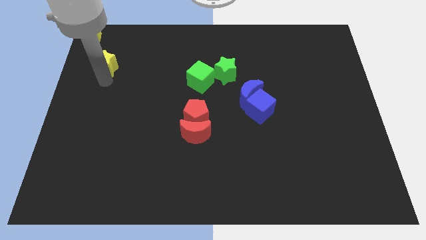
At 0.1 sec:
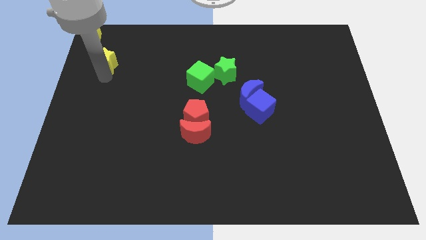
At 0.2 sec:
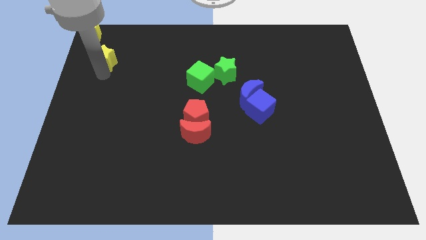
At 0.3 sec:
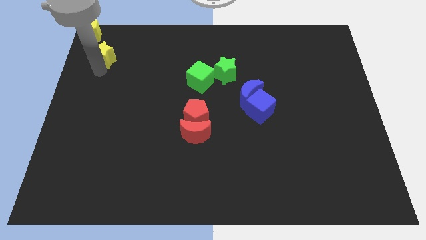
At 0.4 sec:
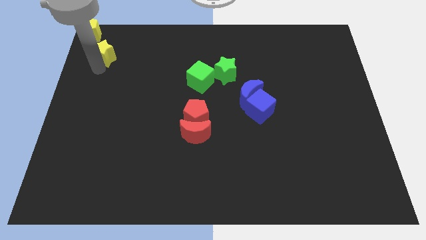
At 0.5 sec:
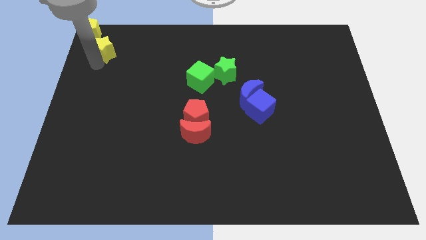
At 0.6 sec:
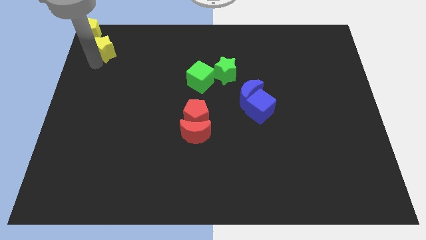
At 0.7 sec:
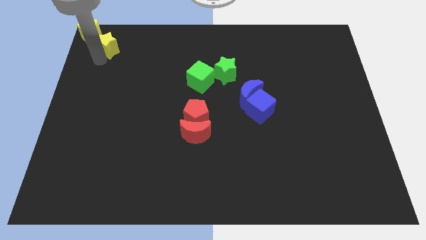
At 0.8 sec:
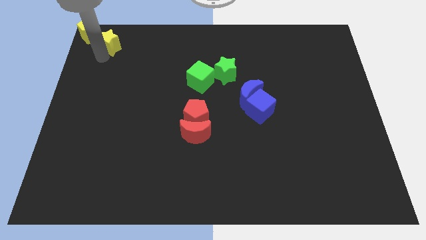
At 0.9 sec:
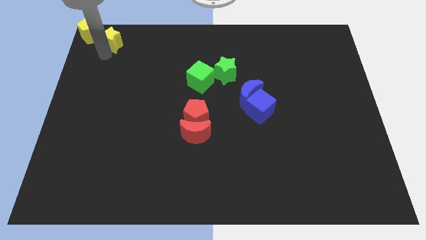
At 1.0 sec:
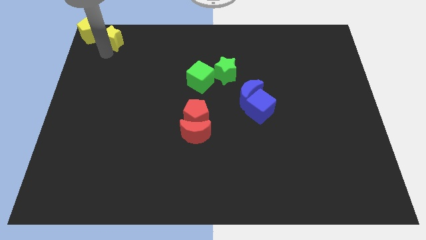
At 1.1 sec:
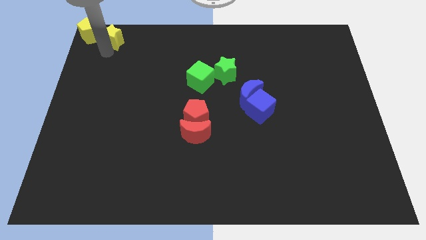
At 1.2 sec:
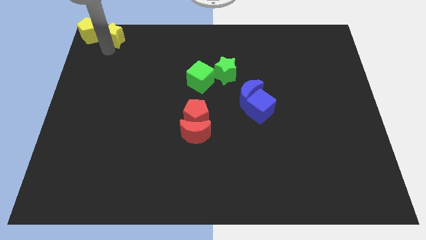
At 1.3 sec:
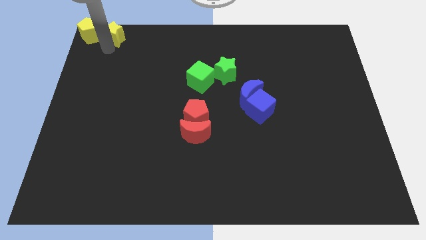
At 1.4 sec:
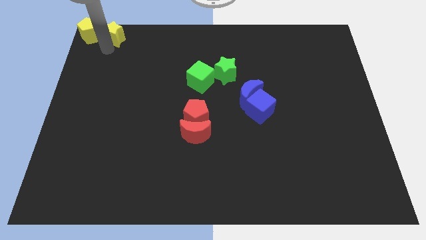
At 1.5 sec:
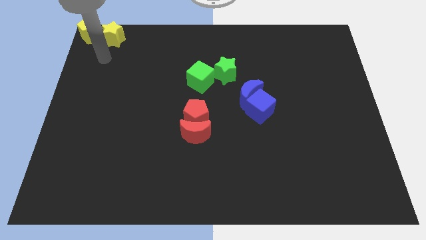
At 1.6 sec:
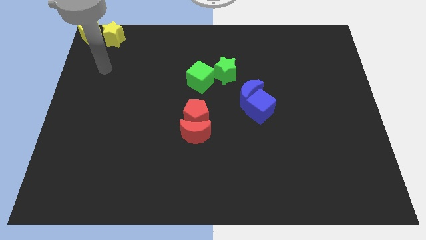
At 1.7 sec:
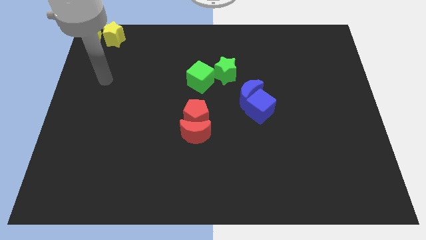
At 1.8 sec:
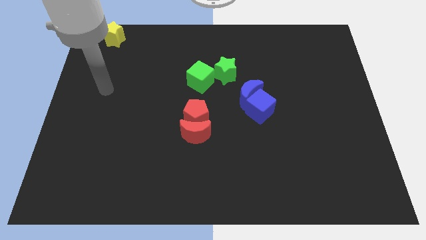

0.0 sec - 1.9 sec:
move the yellow star to the right of the yellow pentagon

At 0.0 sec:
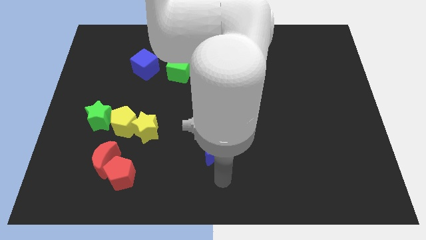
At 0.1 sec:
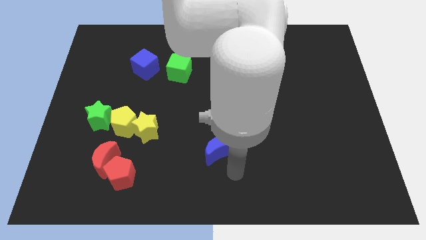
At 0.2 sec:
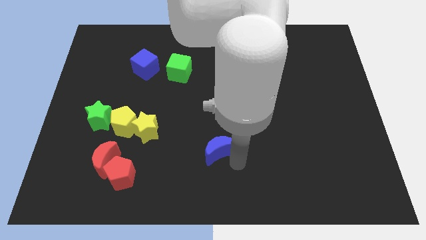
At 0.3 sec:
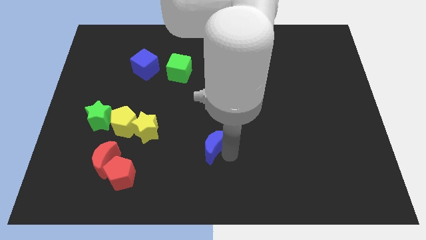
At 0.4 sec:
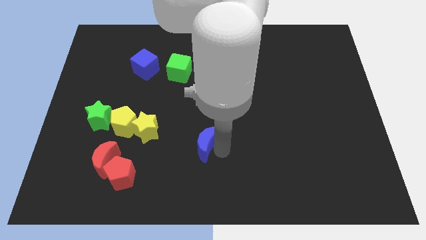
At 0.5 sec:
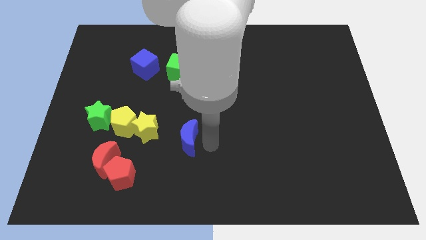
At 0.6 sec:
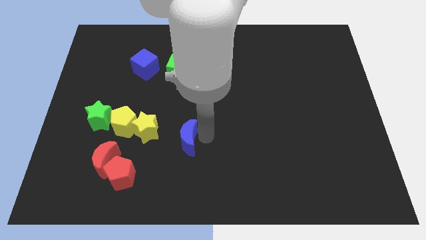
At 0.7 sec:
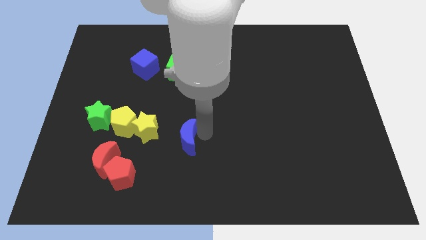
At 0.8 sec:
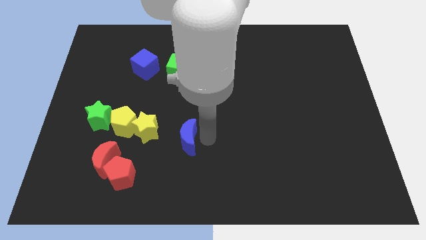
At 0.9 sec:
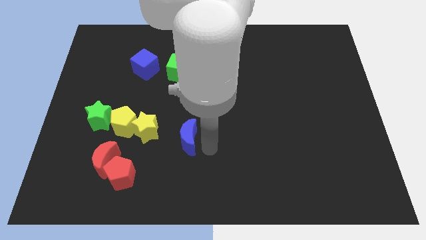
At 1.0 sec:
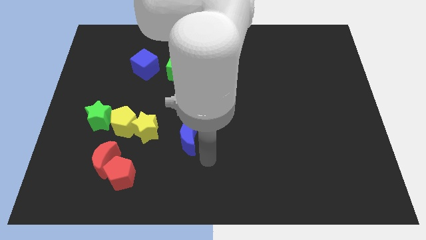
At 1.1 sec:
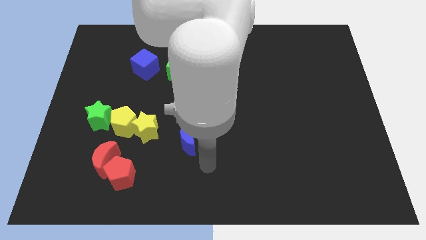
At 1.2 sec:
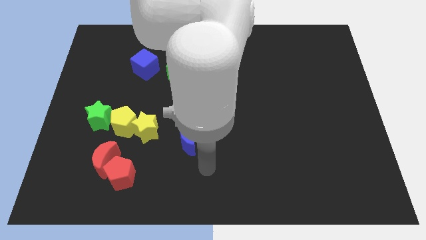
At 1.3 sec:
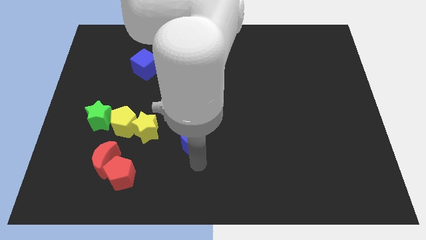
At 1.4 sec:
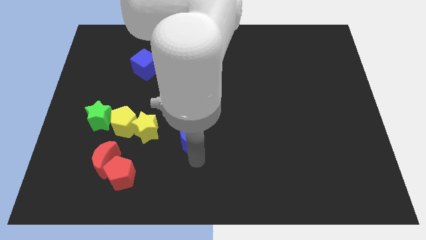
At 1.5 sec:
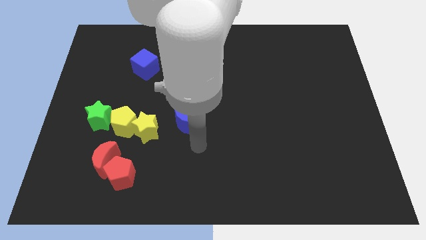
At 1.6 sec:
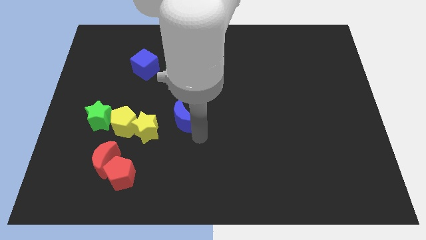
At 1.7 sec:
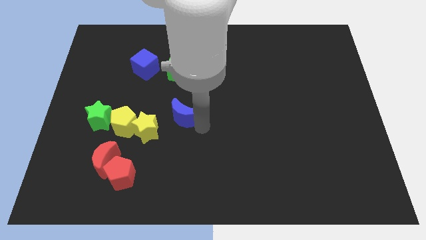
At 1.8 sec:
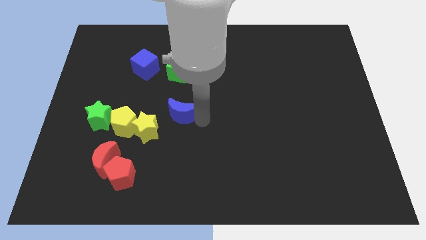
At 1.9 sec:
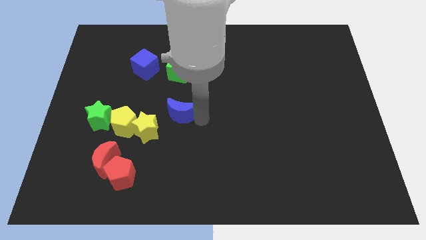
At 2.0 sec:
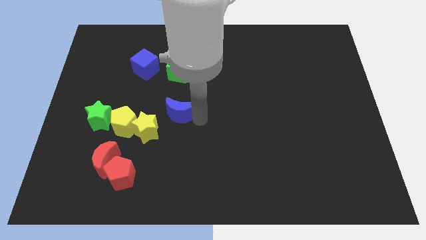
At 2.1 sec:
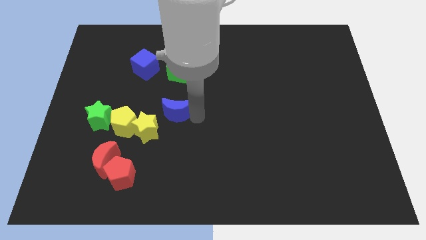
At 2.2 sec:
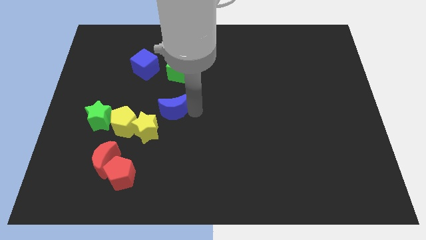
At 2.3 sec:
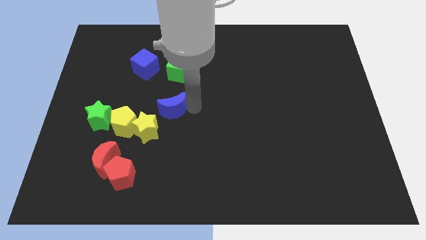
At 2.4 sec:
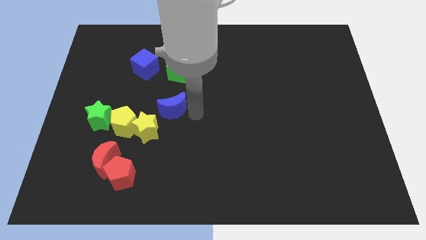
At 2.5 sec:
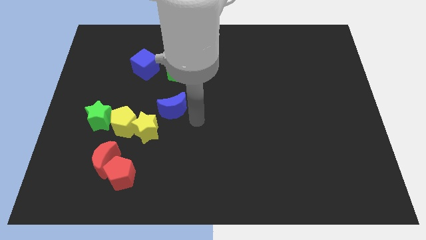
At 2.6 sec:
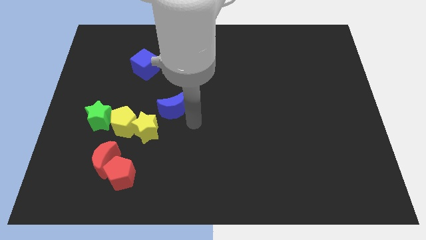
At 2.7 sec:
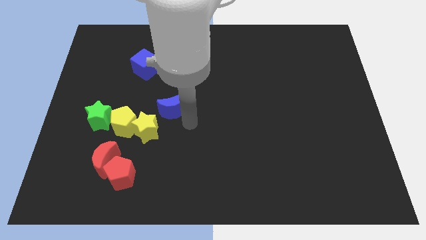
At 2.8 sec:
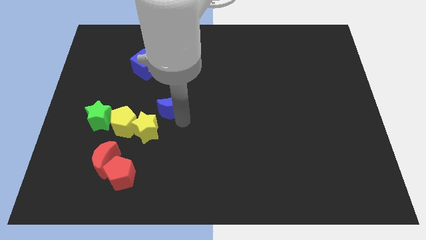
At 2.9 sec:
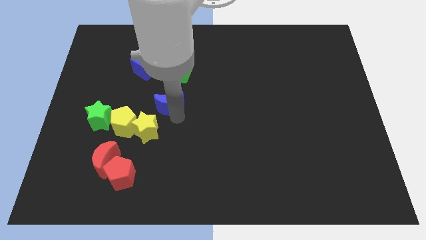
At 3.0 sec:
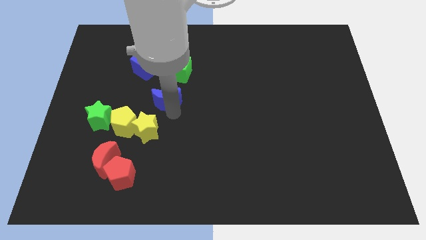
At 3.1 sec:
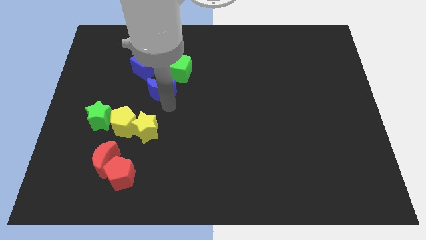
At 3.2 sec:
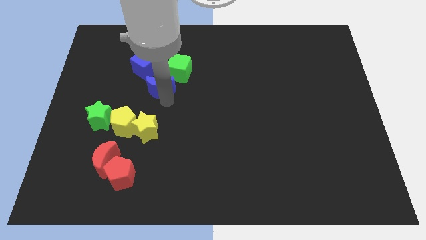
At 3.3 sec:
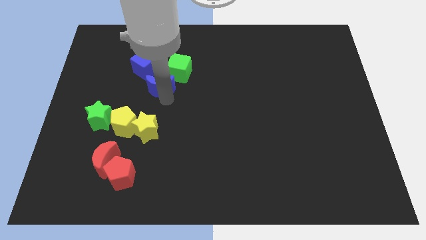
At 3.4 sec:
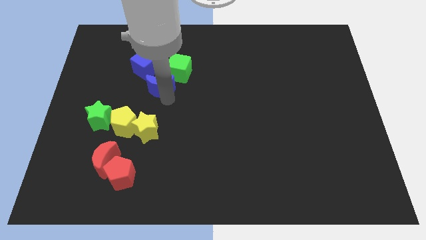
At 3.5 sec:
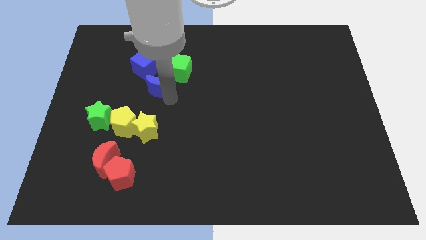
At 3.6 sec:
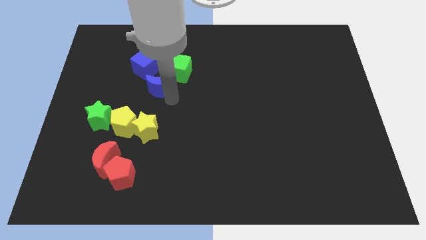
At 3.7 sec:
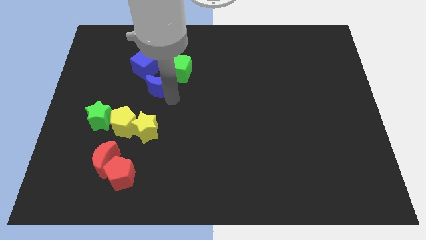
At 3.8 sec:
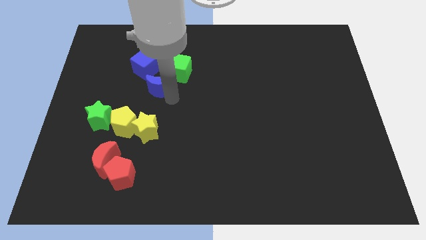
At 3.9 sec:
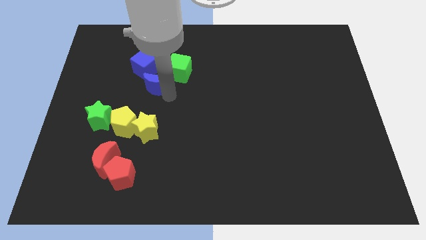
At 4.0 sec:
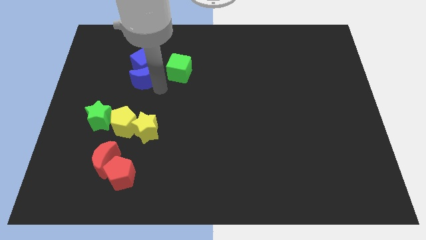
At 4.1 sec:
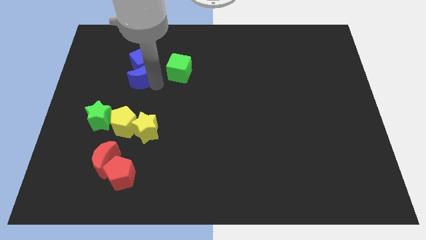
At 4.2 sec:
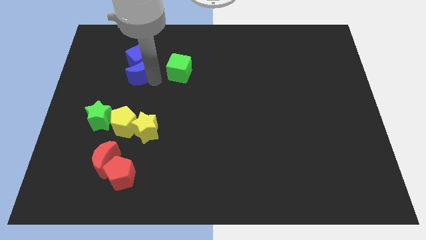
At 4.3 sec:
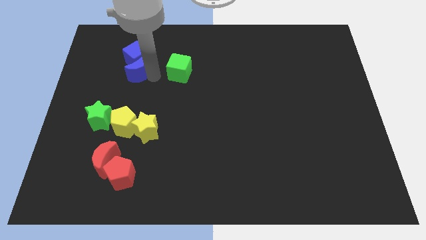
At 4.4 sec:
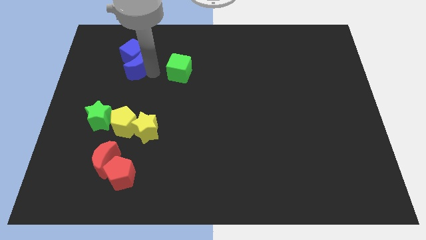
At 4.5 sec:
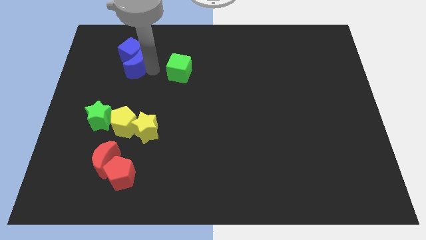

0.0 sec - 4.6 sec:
push the blue moon towards the blue cube

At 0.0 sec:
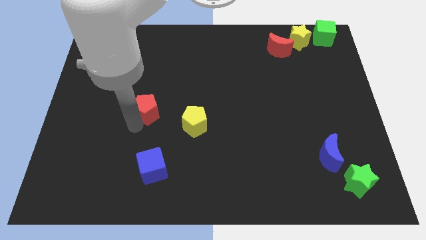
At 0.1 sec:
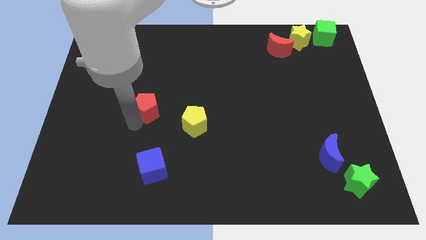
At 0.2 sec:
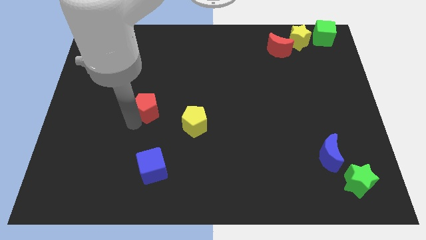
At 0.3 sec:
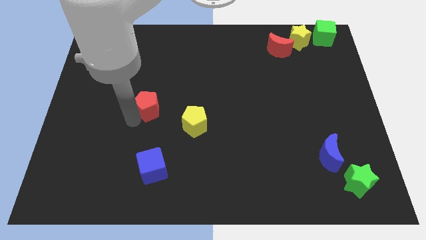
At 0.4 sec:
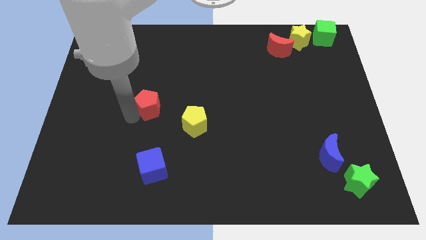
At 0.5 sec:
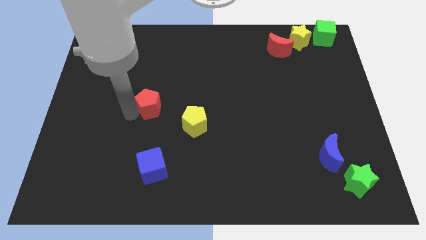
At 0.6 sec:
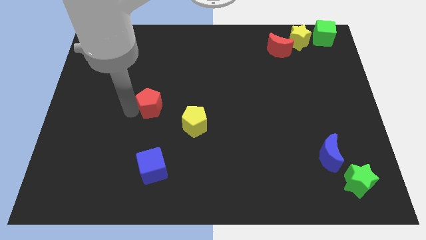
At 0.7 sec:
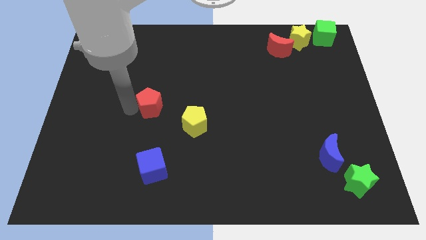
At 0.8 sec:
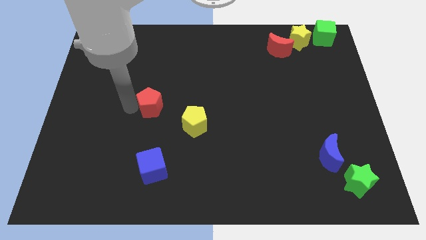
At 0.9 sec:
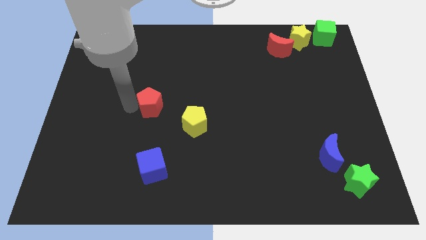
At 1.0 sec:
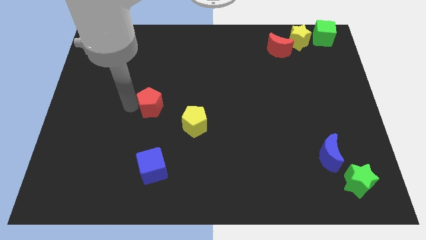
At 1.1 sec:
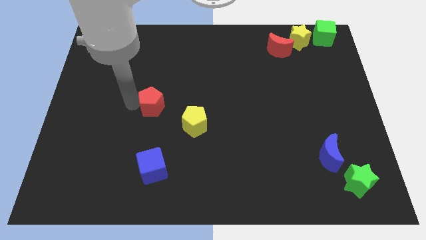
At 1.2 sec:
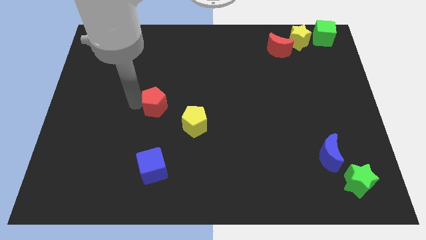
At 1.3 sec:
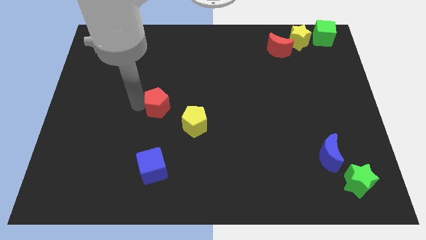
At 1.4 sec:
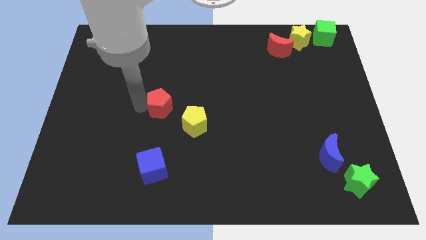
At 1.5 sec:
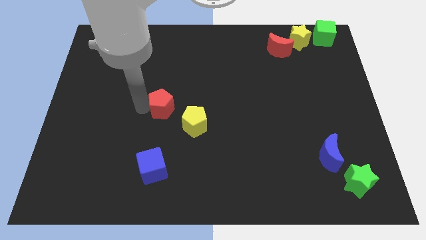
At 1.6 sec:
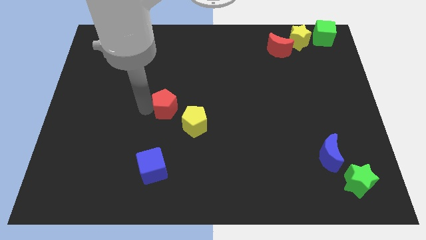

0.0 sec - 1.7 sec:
move the red pentagon above the yellow pentagon

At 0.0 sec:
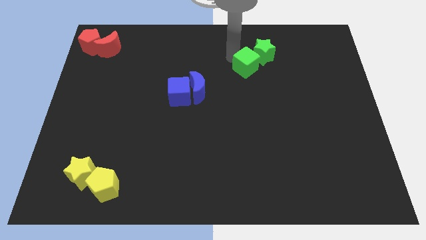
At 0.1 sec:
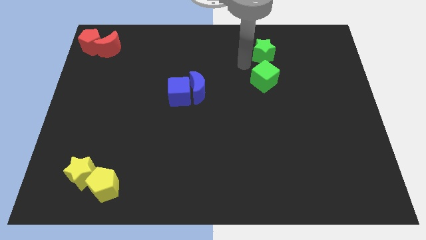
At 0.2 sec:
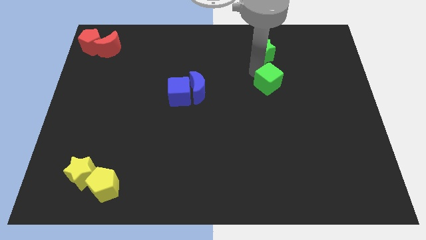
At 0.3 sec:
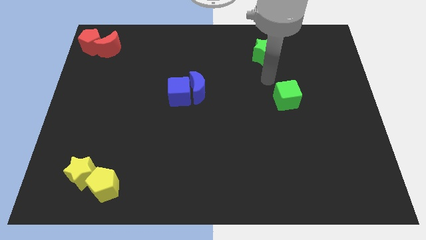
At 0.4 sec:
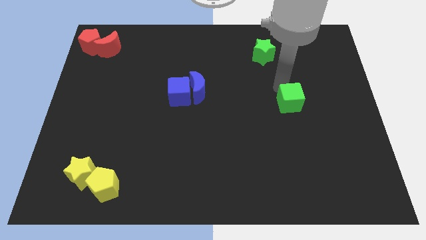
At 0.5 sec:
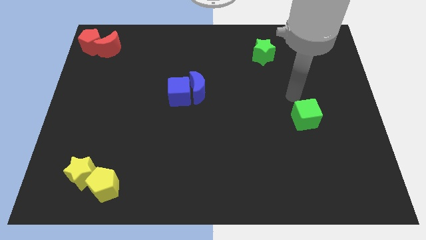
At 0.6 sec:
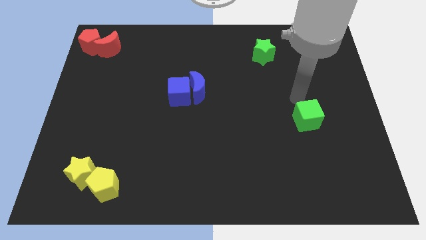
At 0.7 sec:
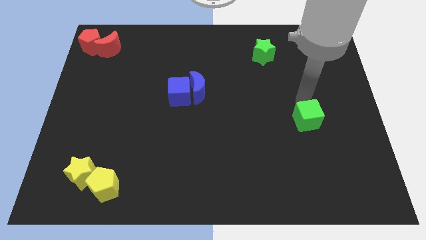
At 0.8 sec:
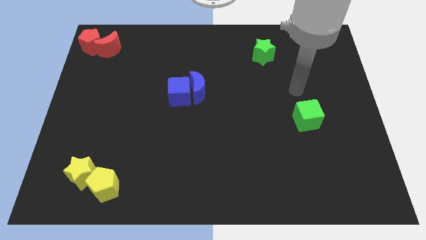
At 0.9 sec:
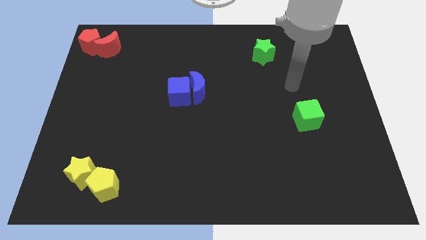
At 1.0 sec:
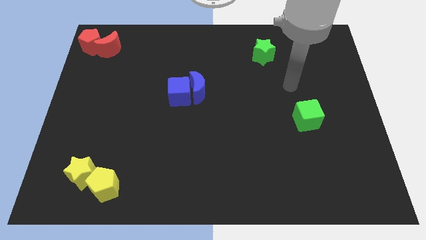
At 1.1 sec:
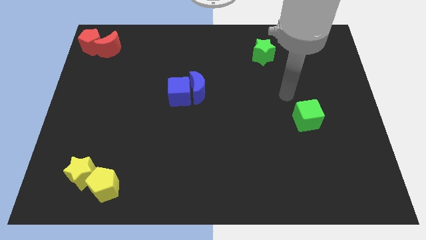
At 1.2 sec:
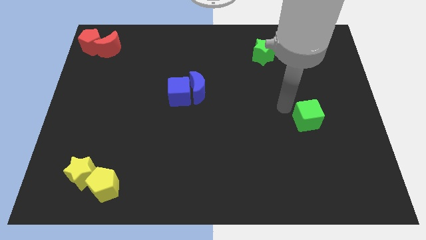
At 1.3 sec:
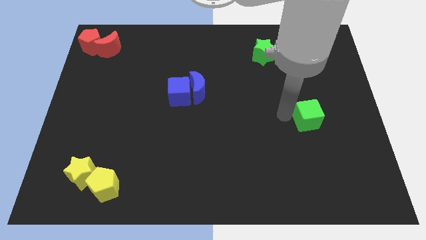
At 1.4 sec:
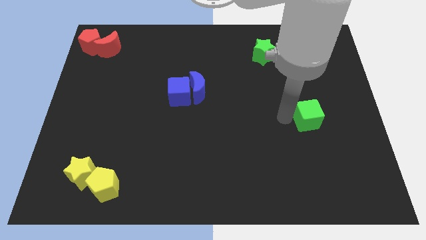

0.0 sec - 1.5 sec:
push the green cube slightly bottom right to the board
